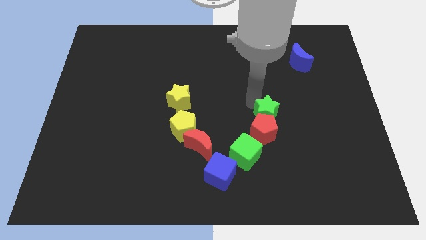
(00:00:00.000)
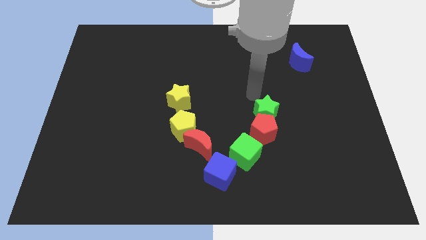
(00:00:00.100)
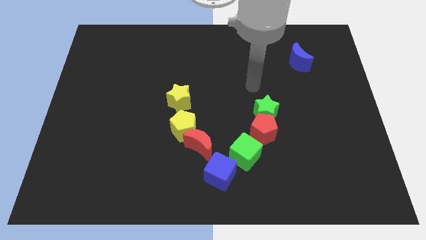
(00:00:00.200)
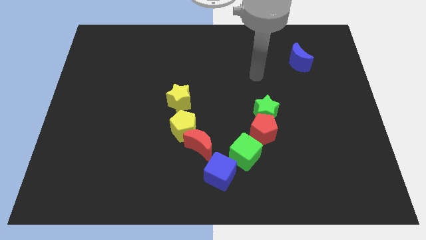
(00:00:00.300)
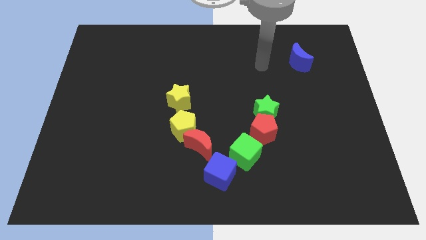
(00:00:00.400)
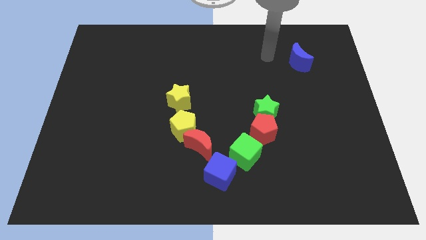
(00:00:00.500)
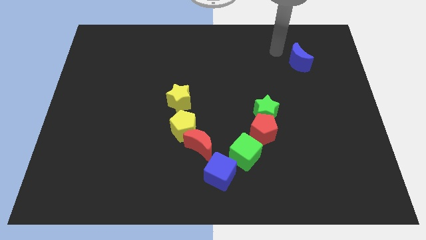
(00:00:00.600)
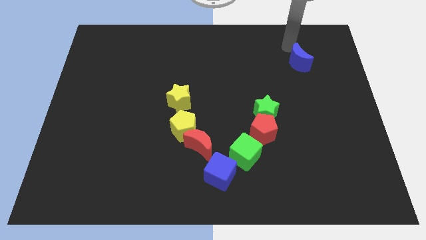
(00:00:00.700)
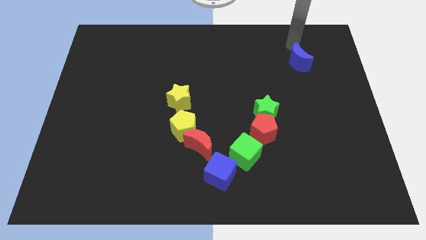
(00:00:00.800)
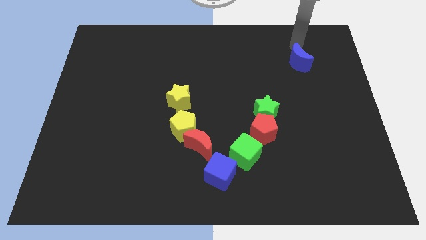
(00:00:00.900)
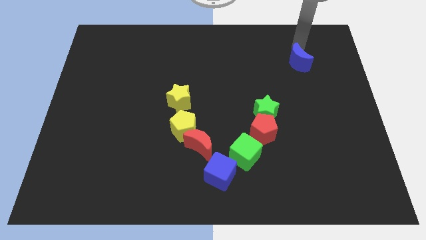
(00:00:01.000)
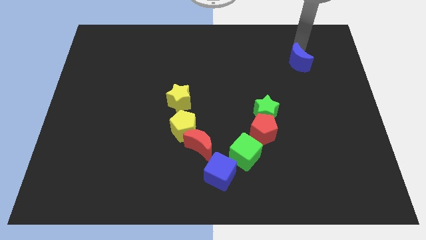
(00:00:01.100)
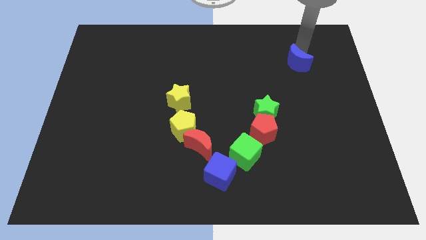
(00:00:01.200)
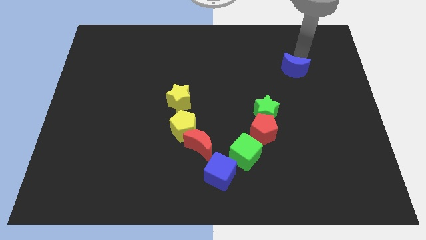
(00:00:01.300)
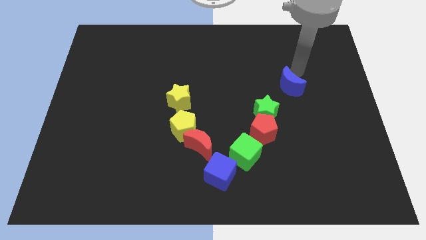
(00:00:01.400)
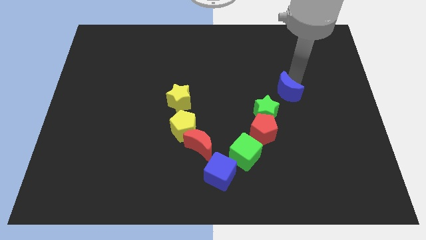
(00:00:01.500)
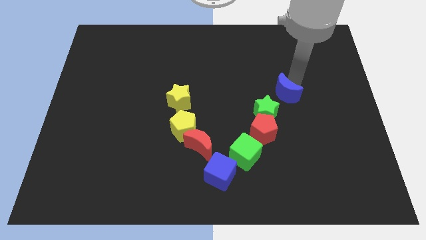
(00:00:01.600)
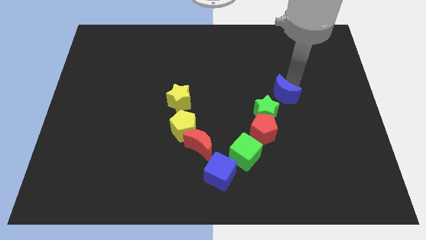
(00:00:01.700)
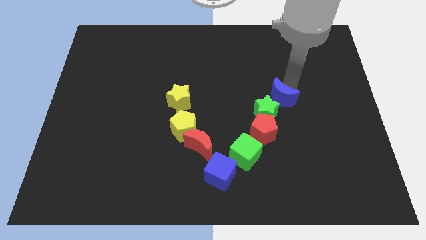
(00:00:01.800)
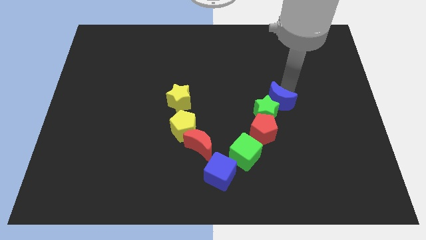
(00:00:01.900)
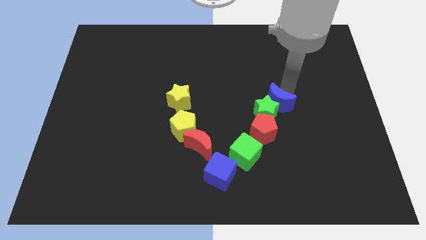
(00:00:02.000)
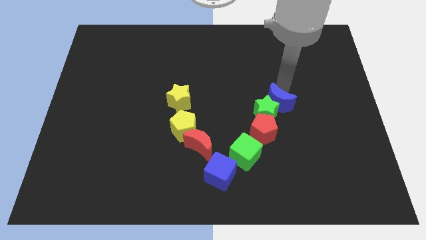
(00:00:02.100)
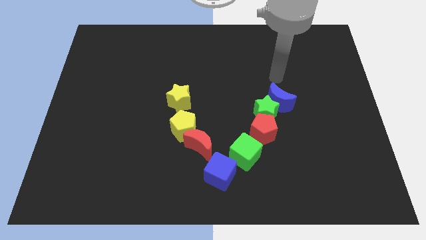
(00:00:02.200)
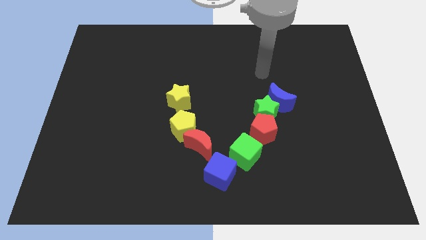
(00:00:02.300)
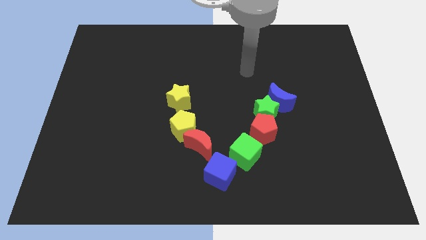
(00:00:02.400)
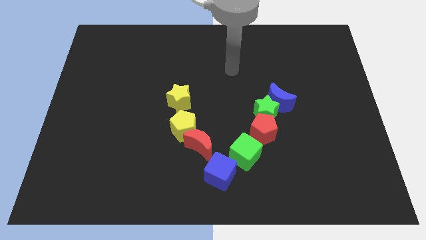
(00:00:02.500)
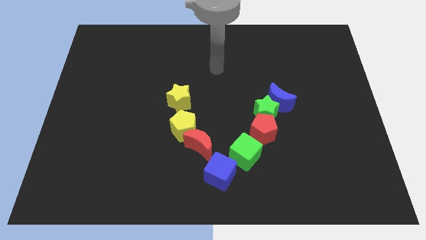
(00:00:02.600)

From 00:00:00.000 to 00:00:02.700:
slide the blue crescent close to the top right side of the green star

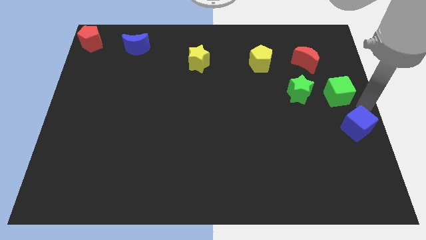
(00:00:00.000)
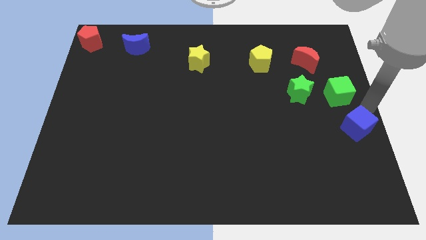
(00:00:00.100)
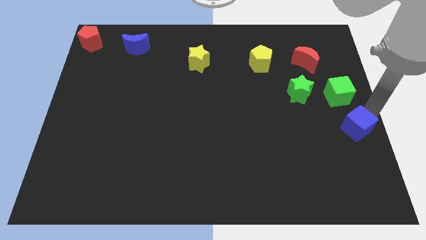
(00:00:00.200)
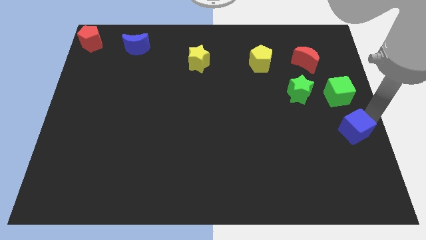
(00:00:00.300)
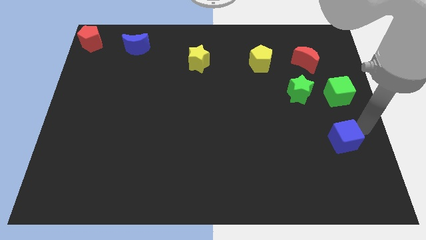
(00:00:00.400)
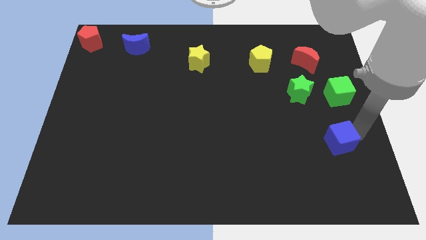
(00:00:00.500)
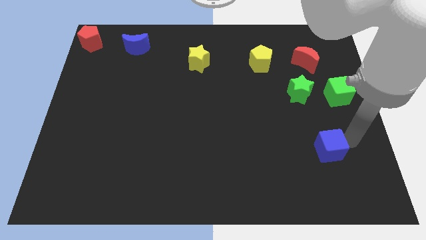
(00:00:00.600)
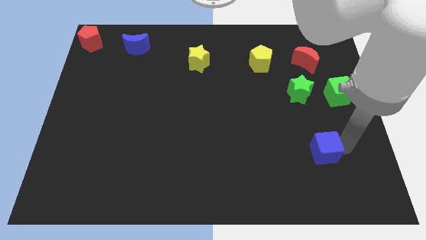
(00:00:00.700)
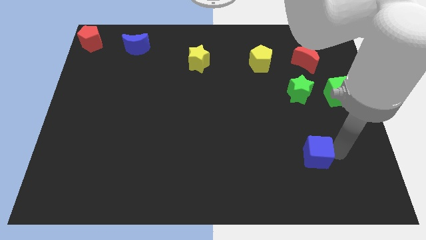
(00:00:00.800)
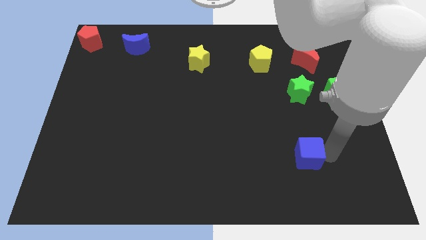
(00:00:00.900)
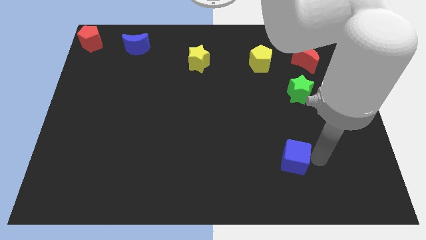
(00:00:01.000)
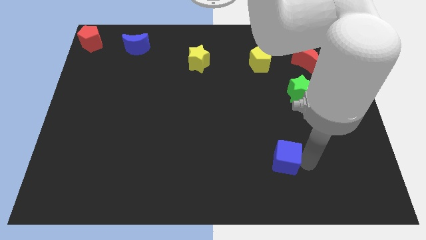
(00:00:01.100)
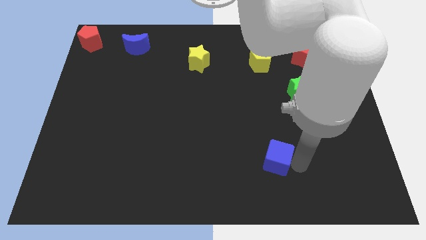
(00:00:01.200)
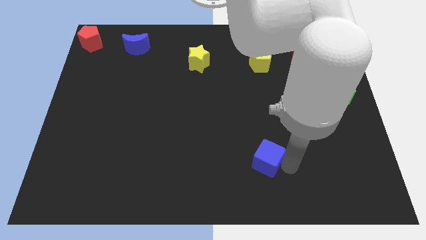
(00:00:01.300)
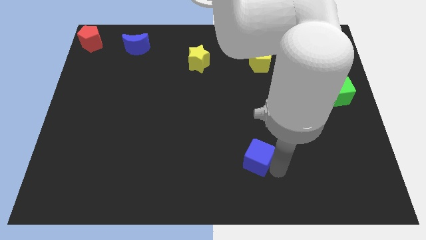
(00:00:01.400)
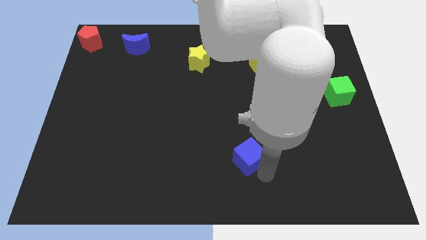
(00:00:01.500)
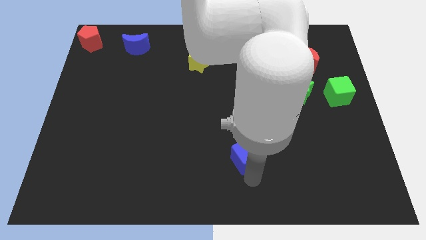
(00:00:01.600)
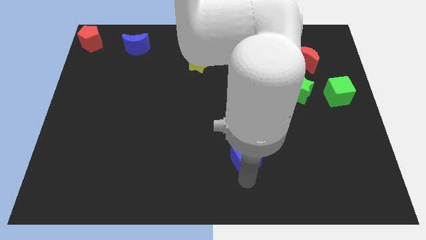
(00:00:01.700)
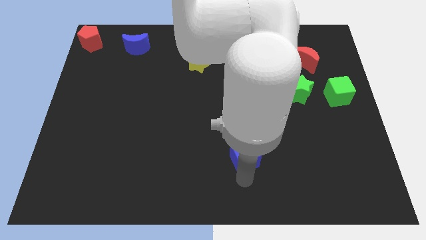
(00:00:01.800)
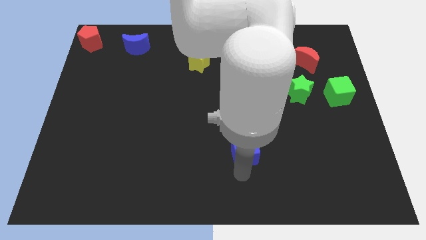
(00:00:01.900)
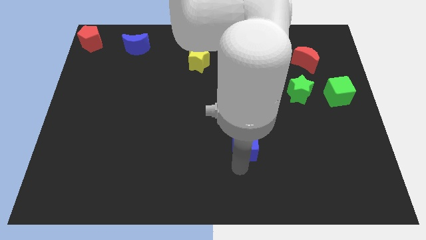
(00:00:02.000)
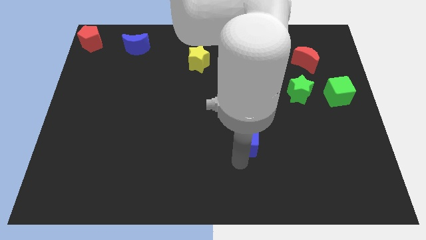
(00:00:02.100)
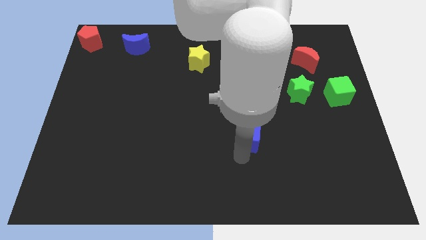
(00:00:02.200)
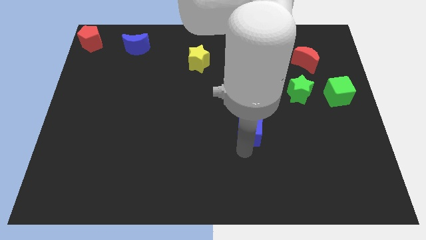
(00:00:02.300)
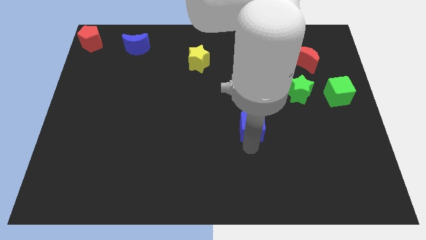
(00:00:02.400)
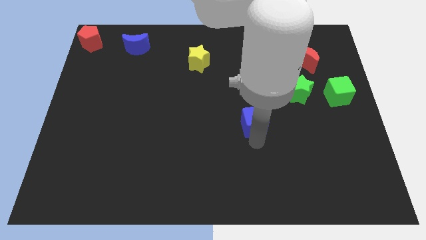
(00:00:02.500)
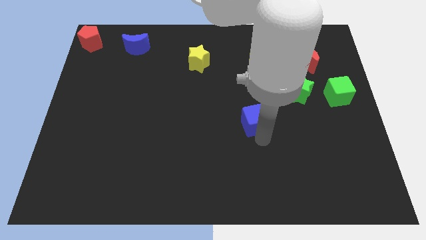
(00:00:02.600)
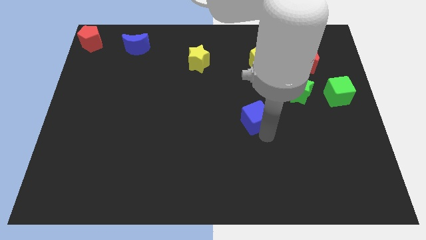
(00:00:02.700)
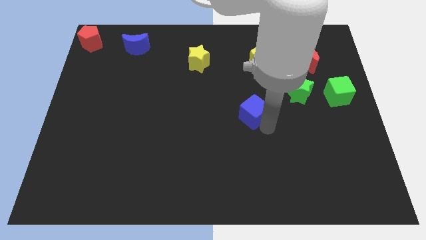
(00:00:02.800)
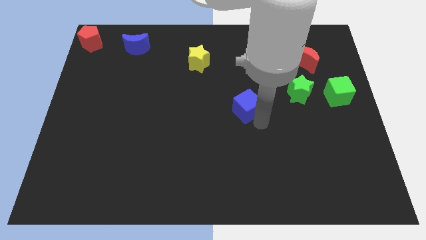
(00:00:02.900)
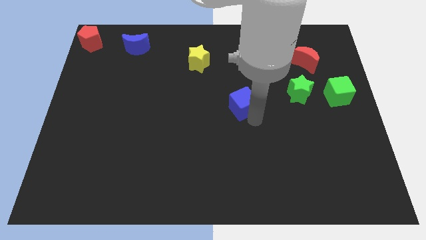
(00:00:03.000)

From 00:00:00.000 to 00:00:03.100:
move blue cube to bottom left of green star

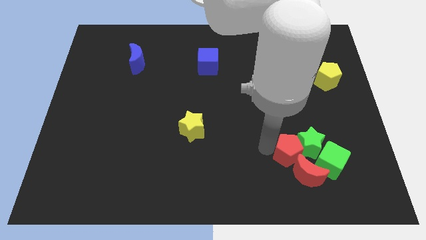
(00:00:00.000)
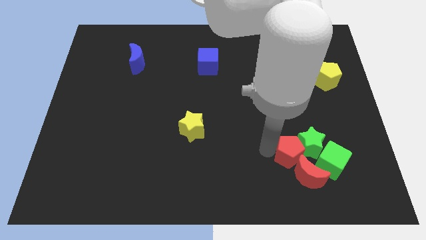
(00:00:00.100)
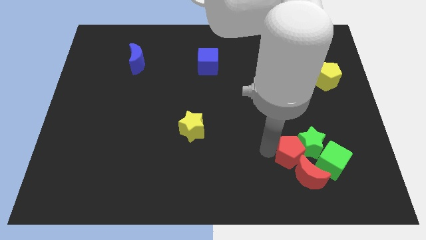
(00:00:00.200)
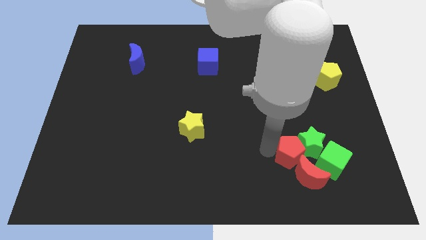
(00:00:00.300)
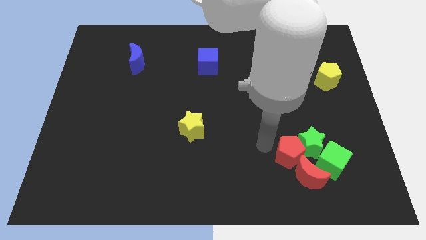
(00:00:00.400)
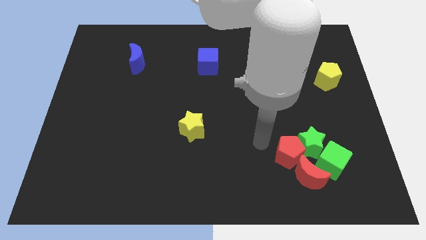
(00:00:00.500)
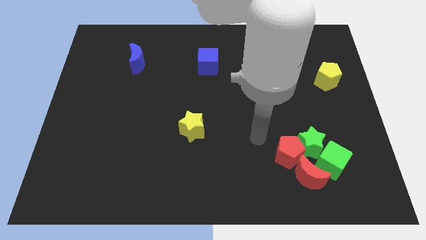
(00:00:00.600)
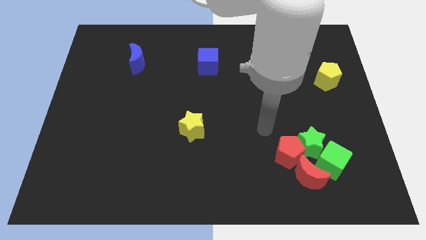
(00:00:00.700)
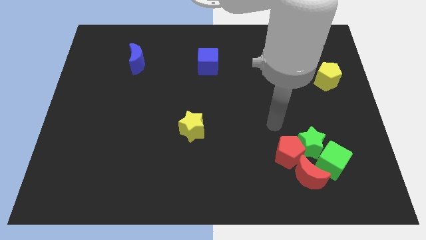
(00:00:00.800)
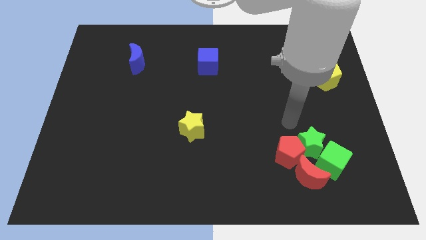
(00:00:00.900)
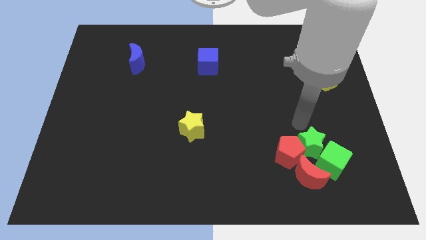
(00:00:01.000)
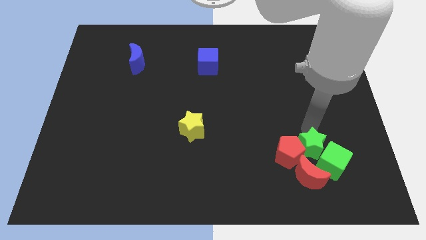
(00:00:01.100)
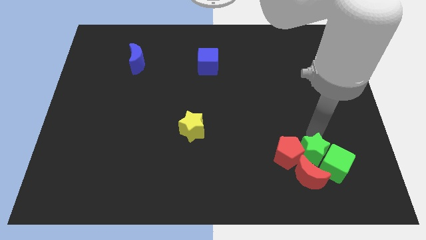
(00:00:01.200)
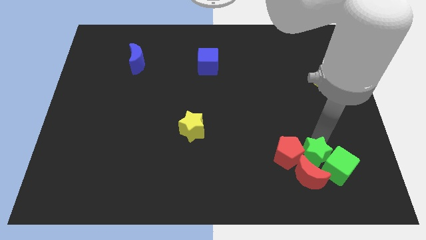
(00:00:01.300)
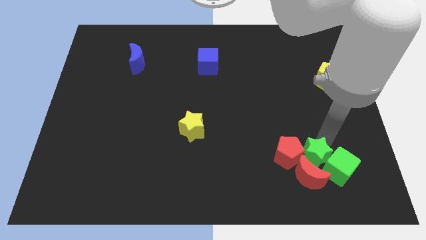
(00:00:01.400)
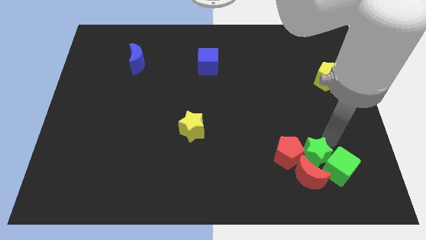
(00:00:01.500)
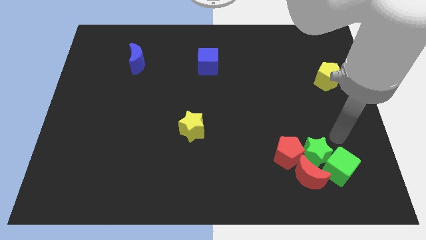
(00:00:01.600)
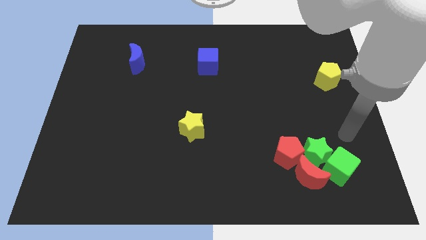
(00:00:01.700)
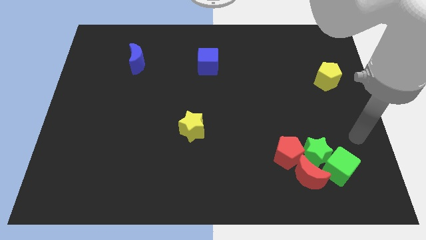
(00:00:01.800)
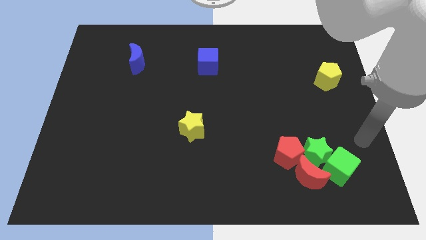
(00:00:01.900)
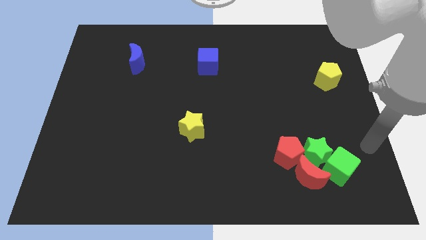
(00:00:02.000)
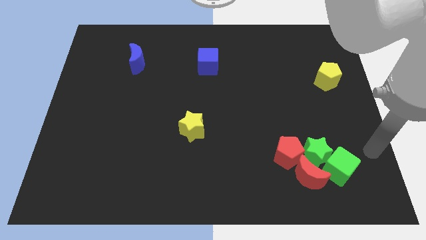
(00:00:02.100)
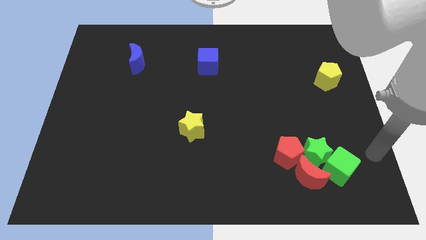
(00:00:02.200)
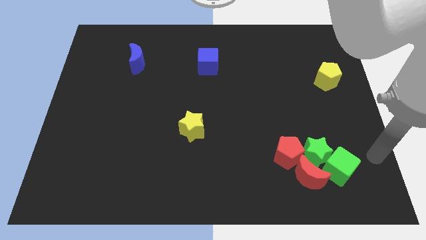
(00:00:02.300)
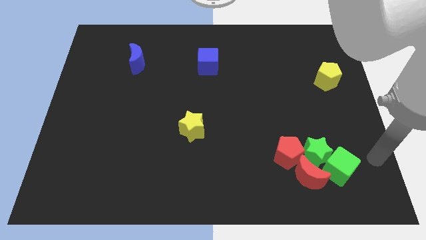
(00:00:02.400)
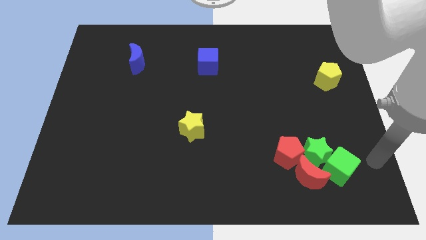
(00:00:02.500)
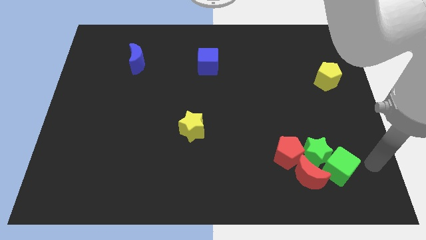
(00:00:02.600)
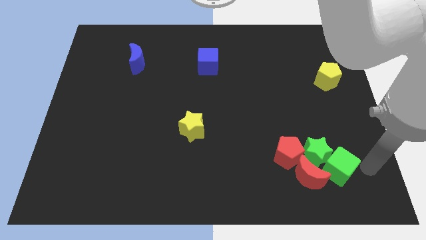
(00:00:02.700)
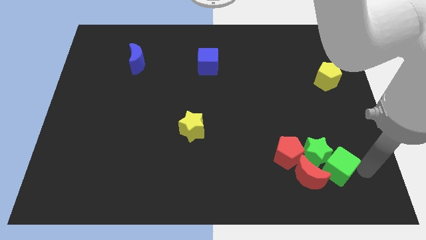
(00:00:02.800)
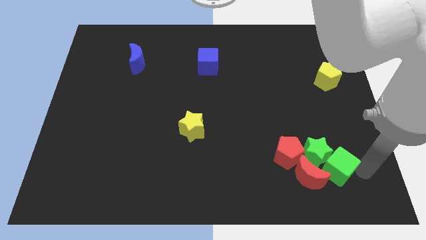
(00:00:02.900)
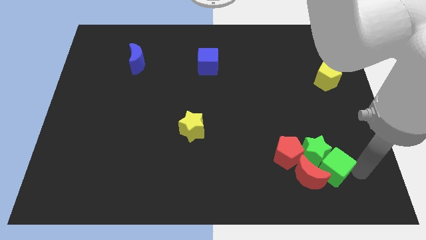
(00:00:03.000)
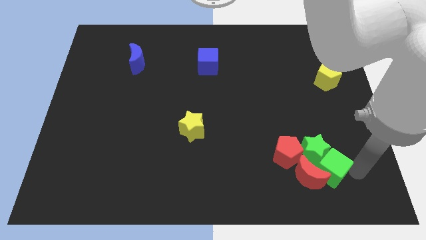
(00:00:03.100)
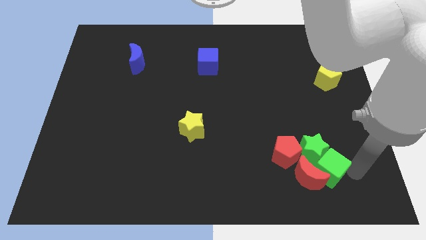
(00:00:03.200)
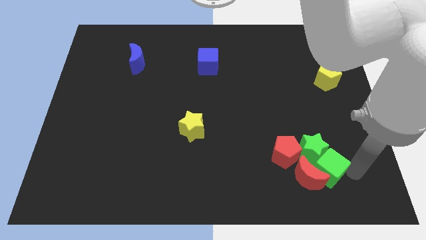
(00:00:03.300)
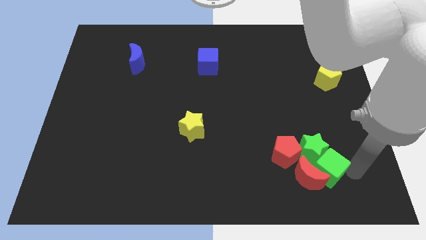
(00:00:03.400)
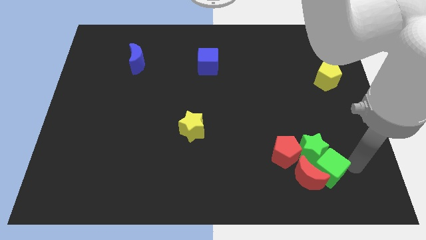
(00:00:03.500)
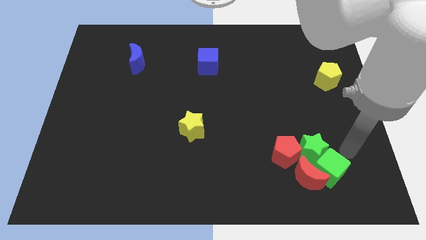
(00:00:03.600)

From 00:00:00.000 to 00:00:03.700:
move the red and green blocks close to each other
